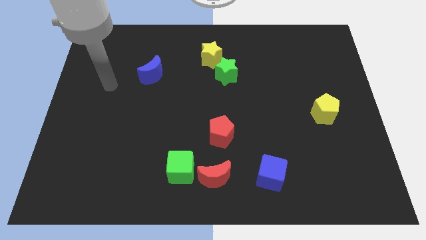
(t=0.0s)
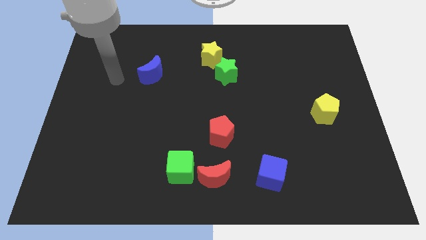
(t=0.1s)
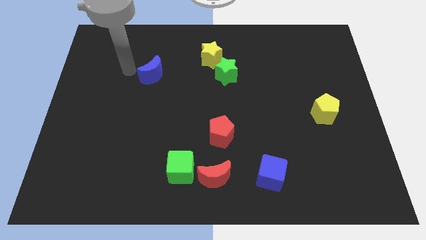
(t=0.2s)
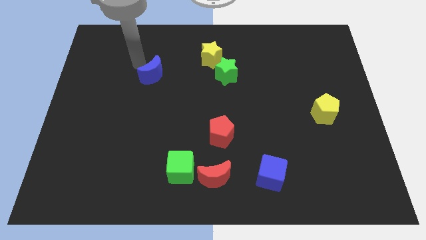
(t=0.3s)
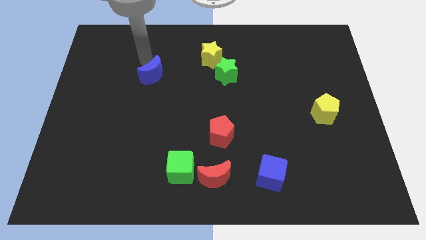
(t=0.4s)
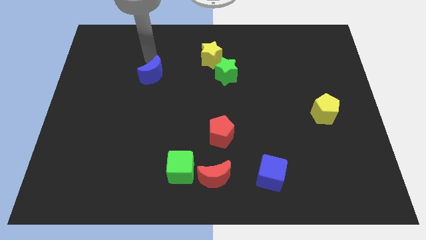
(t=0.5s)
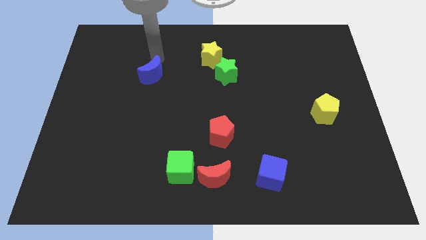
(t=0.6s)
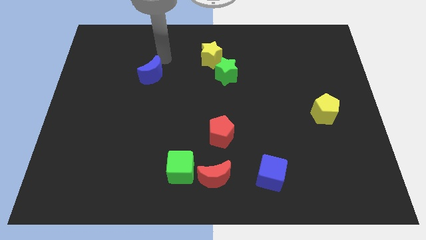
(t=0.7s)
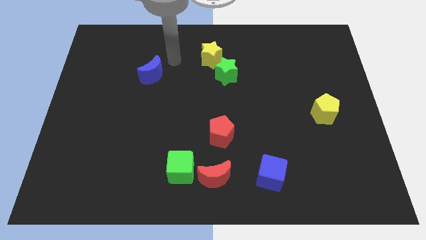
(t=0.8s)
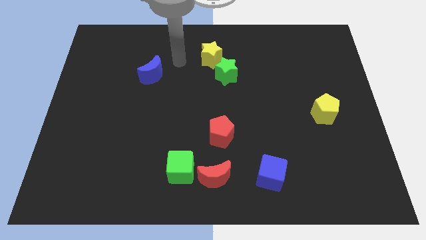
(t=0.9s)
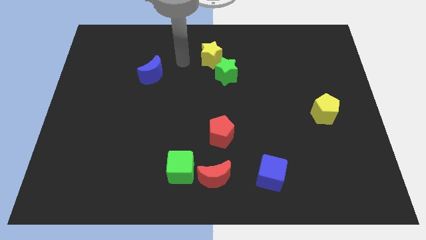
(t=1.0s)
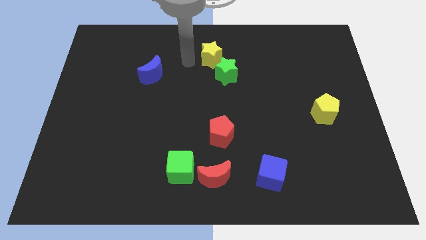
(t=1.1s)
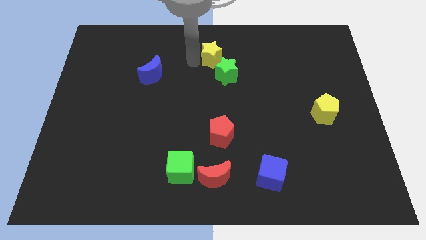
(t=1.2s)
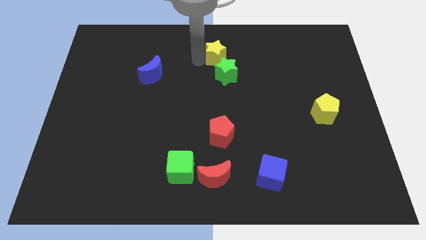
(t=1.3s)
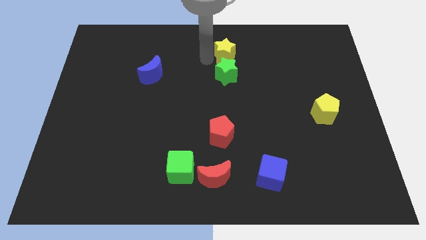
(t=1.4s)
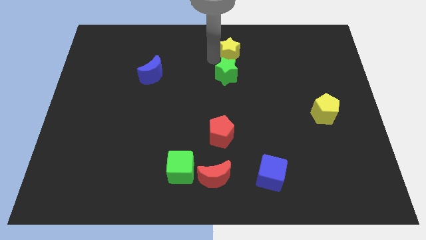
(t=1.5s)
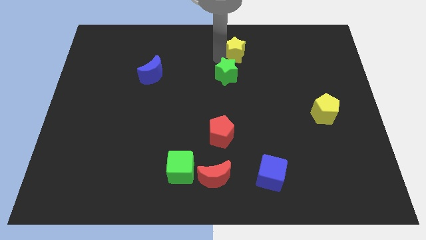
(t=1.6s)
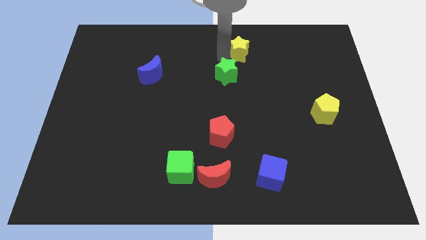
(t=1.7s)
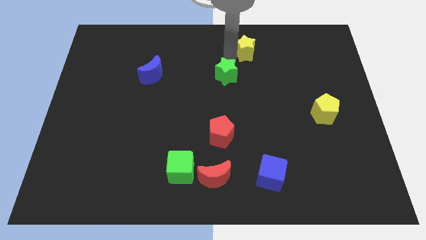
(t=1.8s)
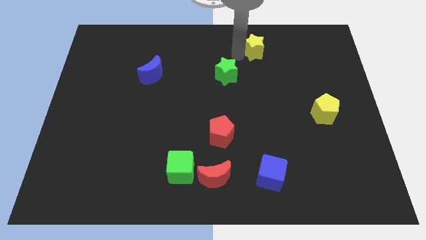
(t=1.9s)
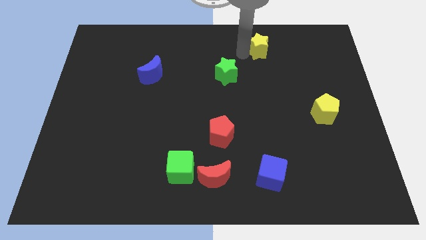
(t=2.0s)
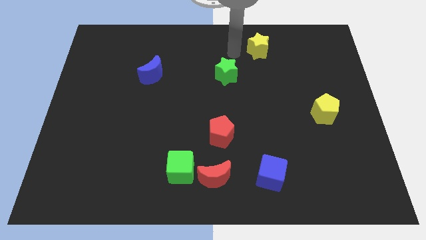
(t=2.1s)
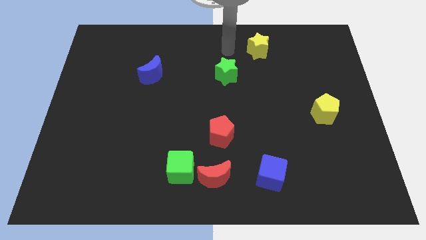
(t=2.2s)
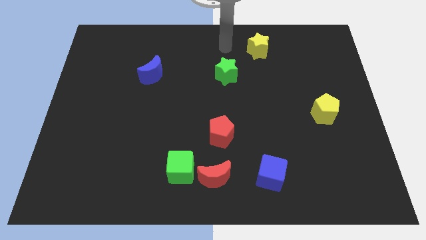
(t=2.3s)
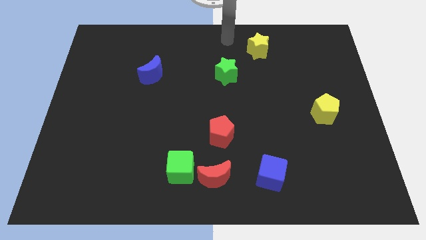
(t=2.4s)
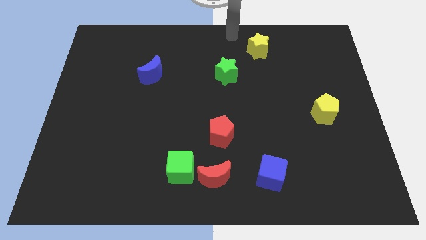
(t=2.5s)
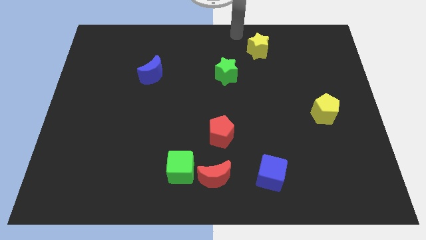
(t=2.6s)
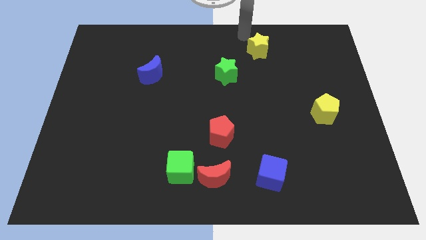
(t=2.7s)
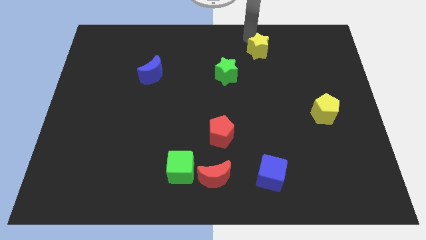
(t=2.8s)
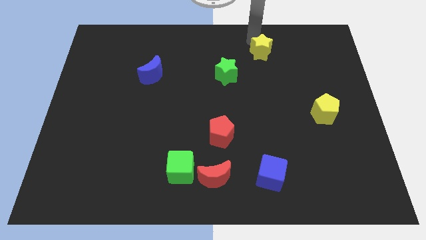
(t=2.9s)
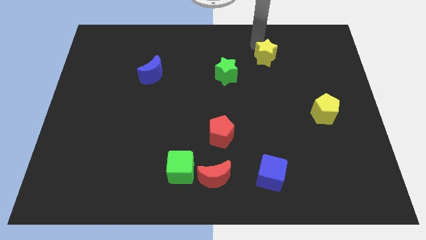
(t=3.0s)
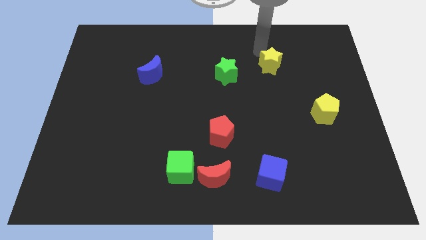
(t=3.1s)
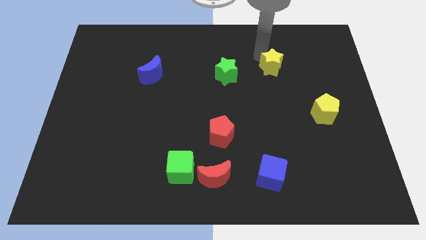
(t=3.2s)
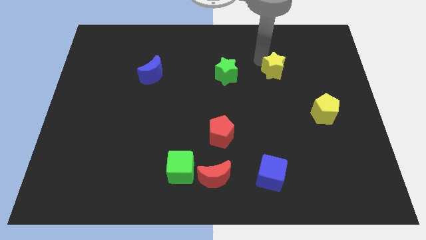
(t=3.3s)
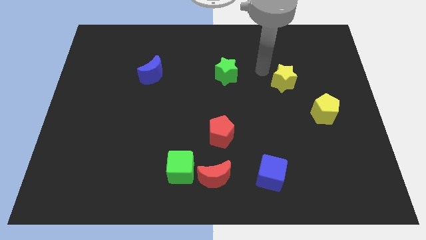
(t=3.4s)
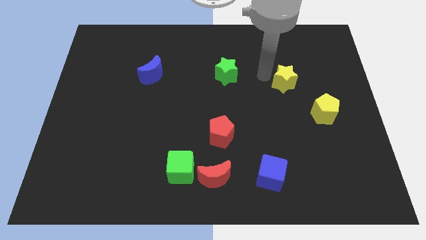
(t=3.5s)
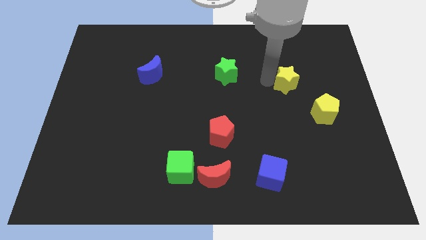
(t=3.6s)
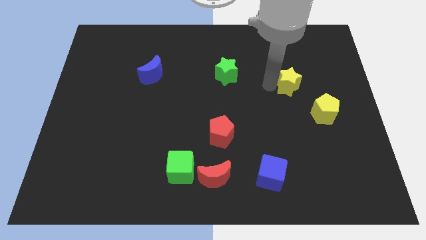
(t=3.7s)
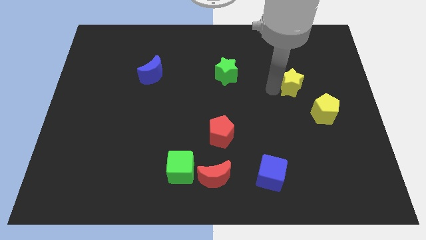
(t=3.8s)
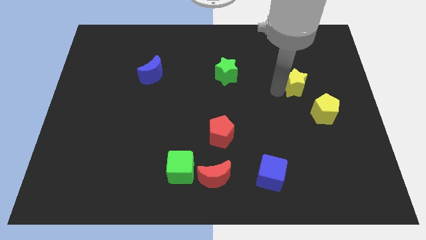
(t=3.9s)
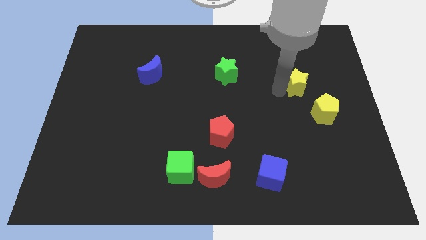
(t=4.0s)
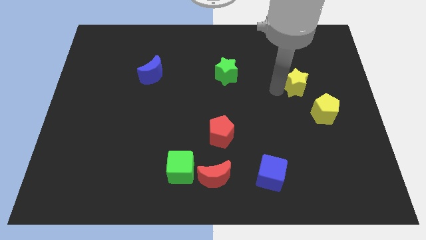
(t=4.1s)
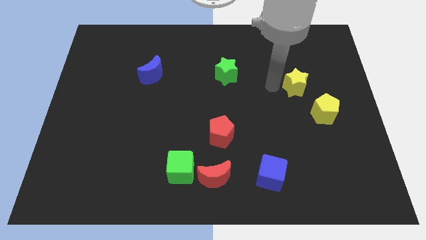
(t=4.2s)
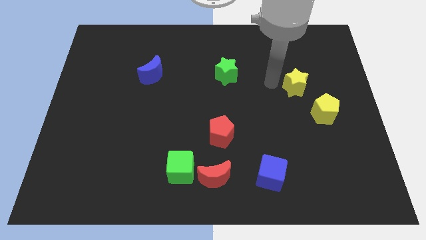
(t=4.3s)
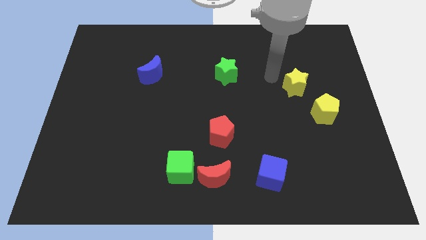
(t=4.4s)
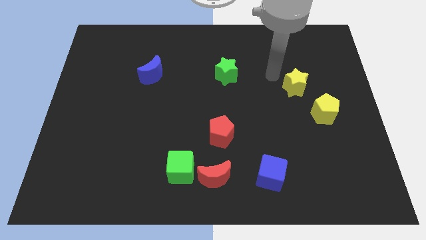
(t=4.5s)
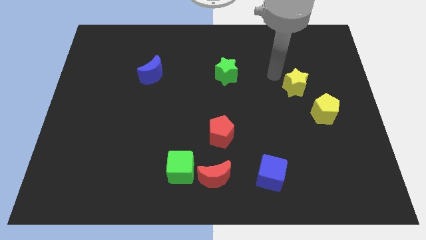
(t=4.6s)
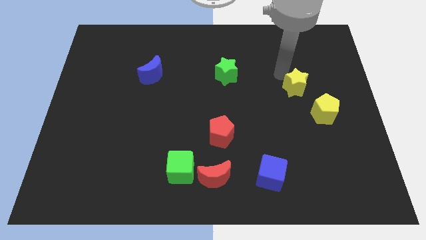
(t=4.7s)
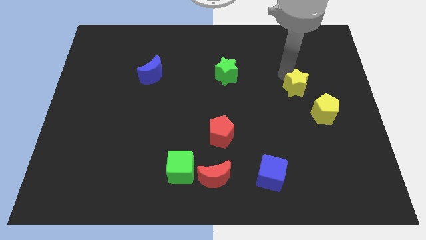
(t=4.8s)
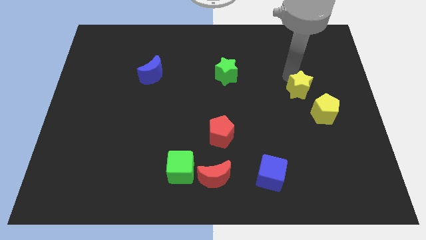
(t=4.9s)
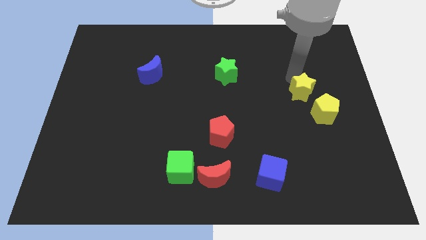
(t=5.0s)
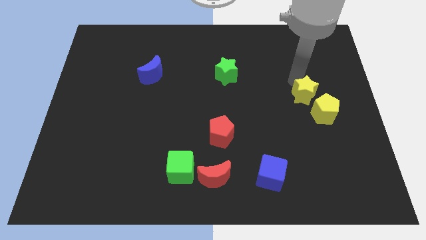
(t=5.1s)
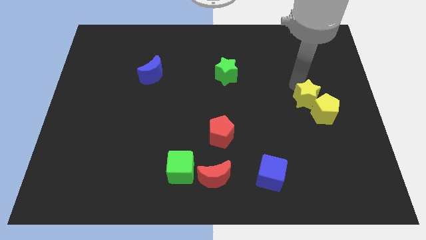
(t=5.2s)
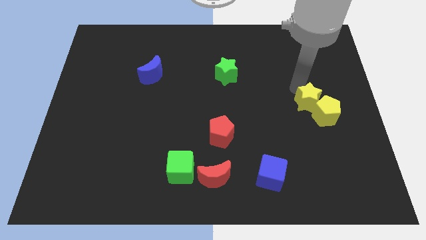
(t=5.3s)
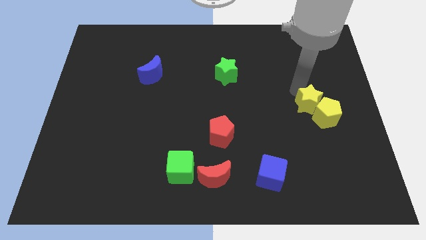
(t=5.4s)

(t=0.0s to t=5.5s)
move the yellow star to the yellow pentagon

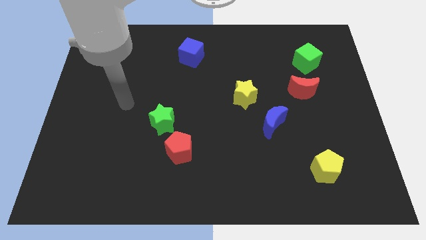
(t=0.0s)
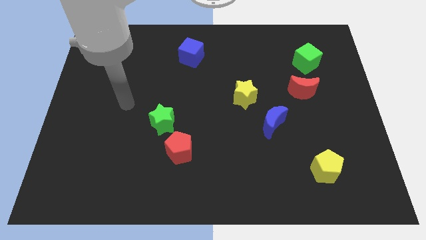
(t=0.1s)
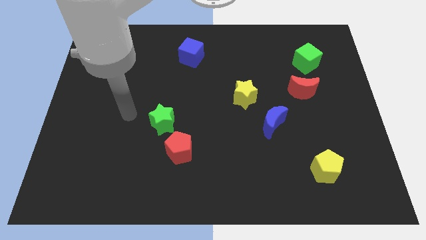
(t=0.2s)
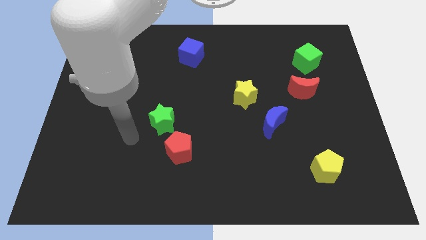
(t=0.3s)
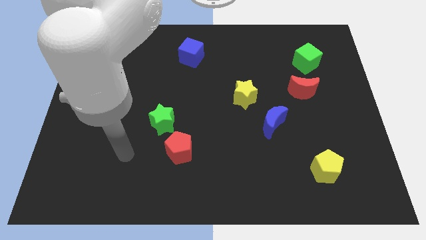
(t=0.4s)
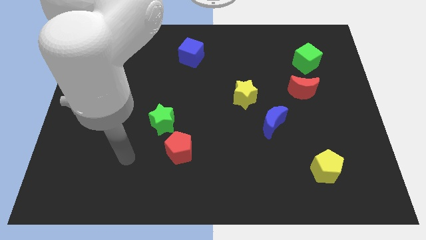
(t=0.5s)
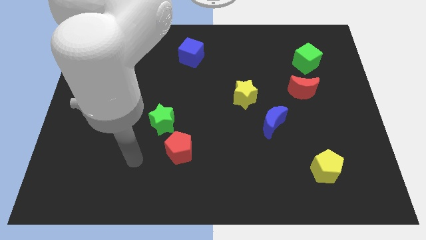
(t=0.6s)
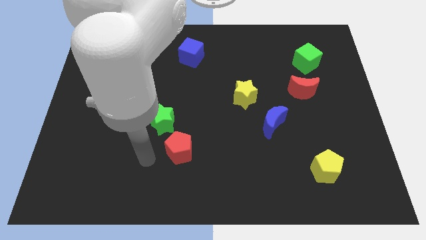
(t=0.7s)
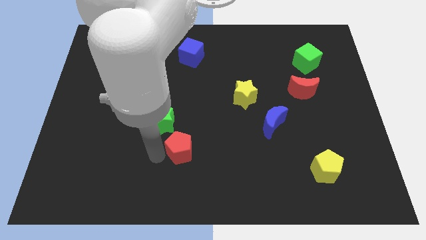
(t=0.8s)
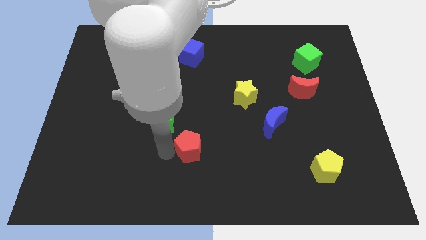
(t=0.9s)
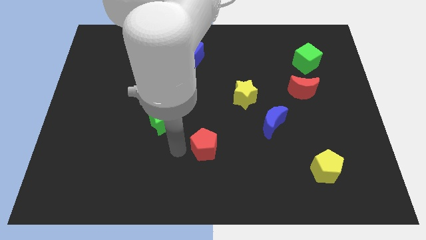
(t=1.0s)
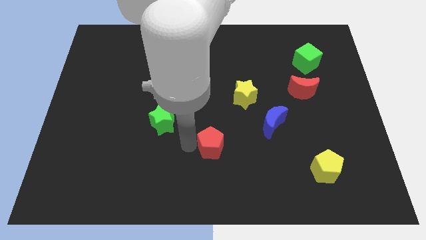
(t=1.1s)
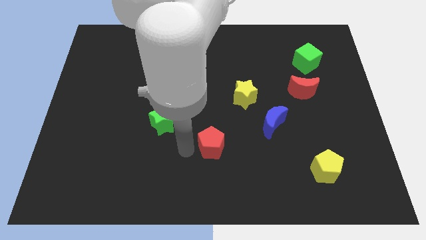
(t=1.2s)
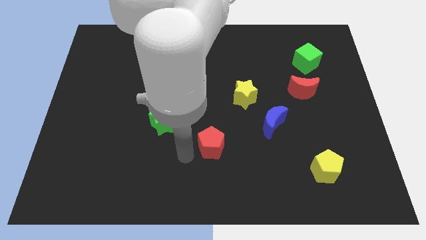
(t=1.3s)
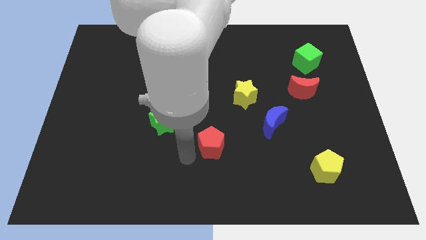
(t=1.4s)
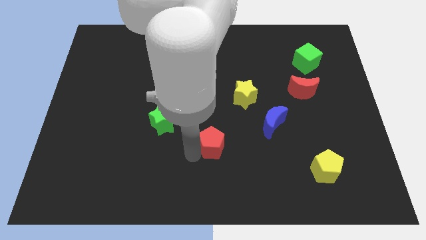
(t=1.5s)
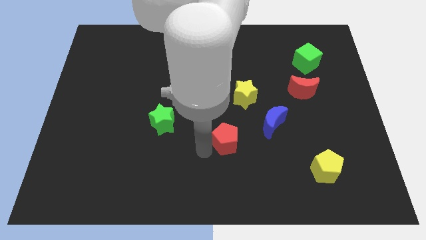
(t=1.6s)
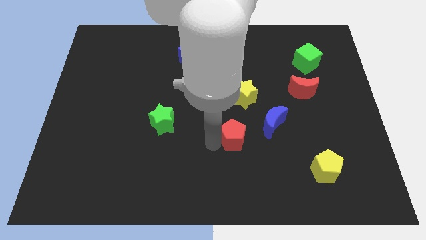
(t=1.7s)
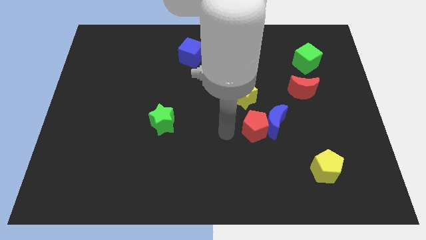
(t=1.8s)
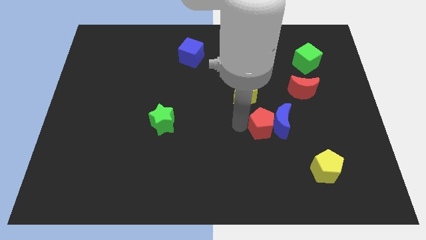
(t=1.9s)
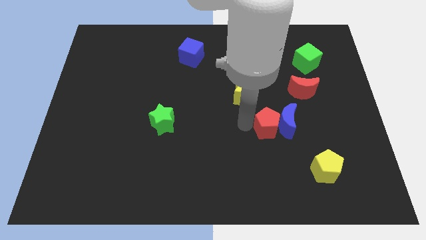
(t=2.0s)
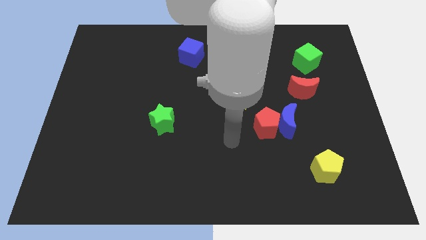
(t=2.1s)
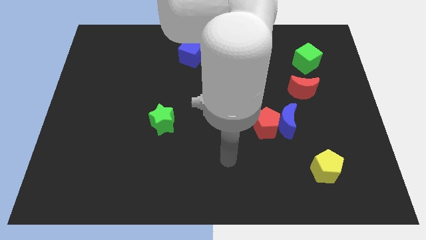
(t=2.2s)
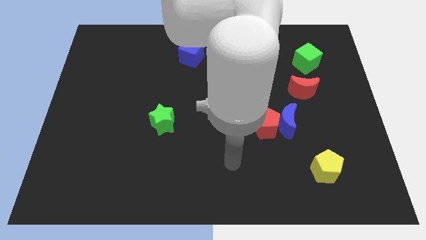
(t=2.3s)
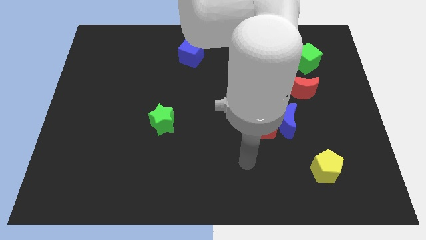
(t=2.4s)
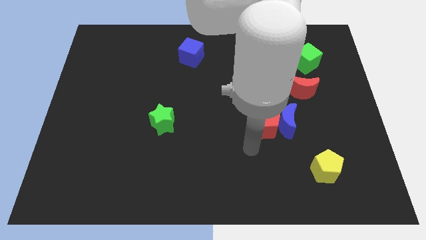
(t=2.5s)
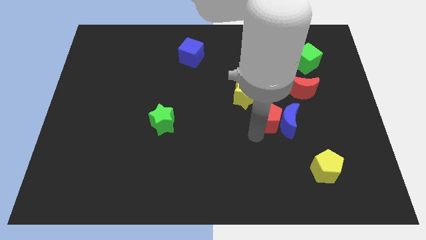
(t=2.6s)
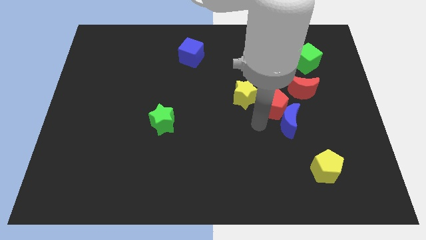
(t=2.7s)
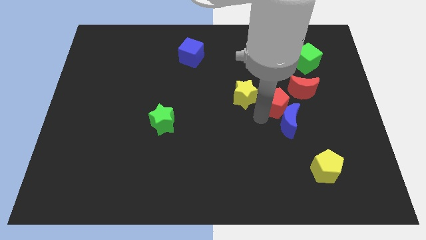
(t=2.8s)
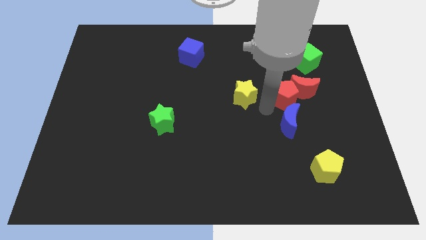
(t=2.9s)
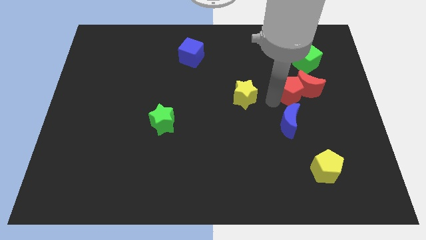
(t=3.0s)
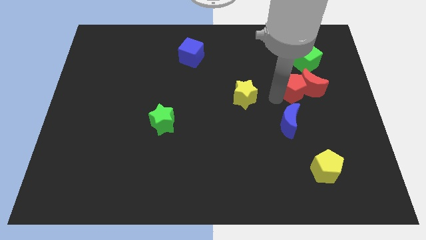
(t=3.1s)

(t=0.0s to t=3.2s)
put the red pentagon close to the red moon
